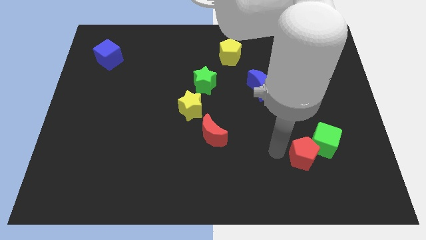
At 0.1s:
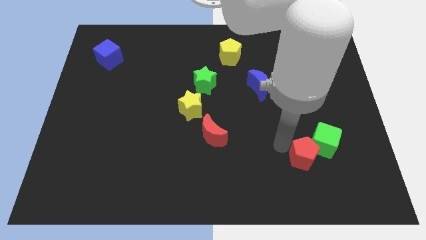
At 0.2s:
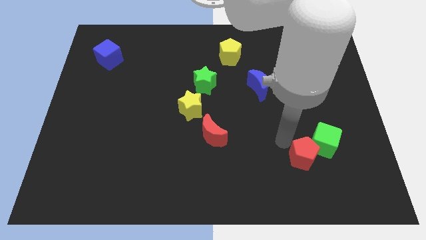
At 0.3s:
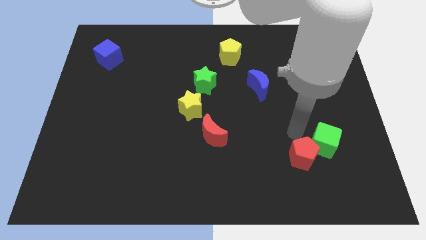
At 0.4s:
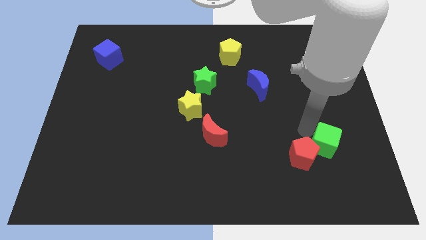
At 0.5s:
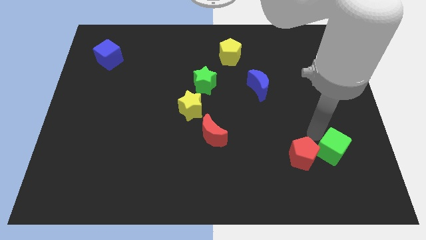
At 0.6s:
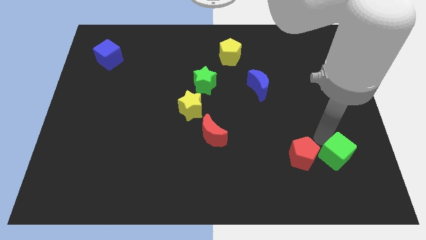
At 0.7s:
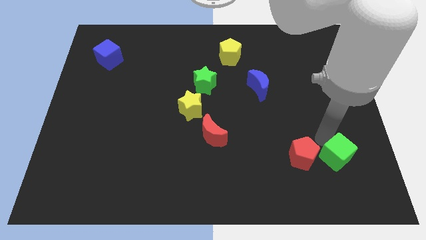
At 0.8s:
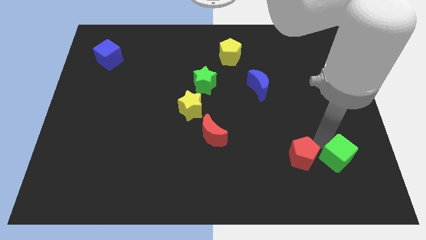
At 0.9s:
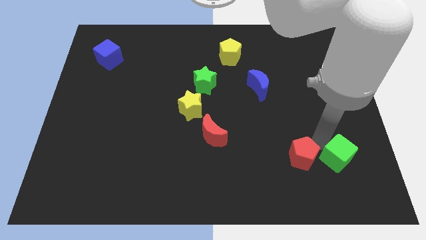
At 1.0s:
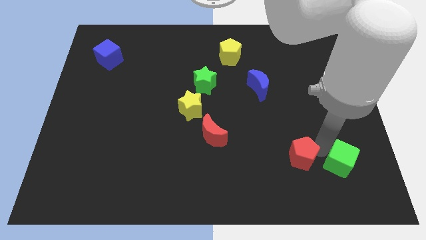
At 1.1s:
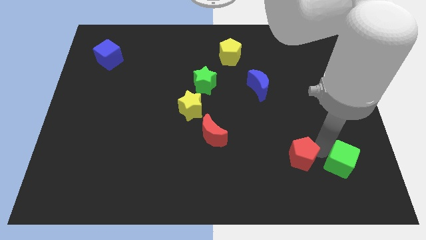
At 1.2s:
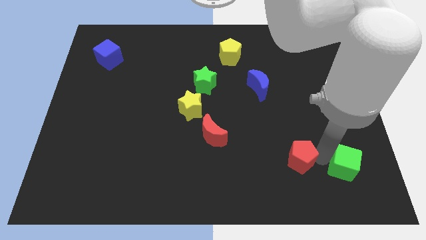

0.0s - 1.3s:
place the green cube right to the red pentagon

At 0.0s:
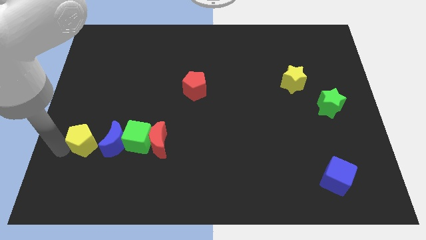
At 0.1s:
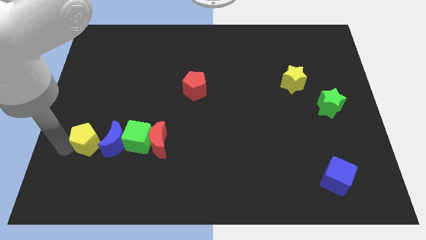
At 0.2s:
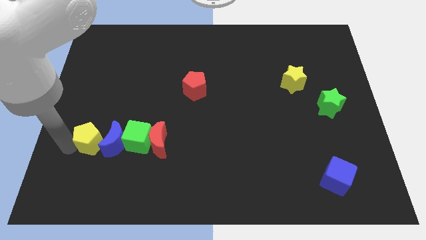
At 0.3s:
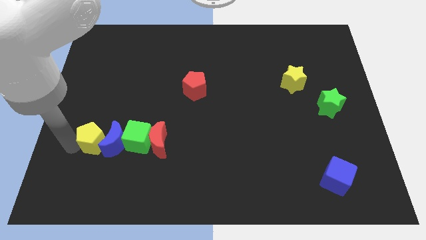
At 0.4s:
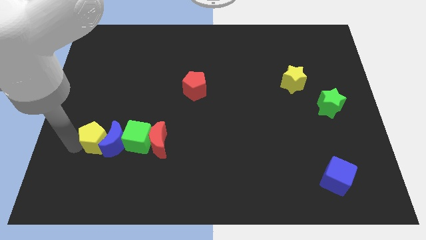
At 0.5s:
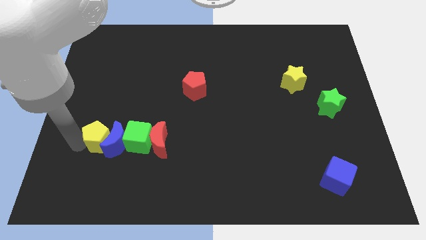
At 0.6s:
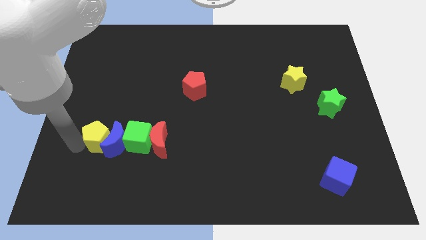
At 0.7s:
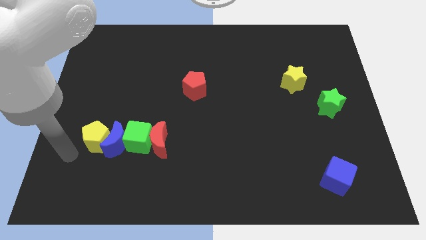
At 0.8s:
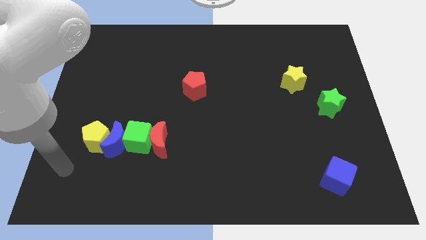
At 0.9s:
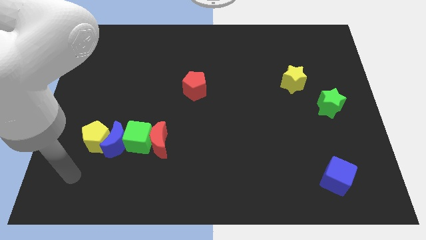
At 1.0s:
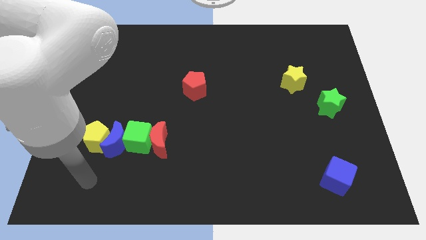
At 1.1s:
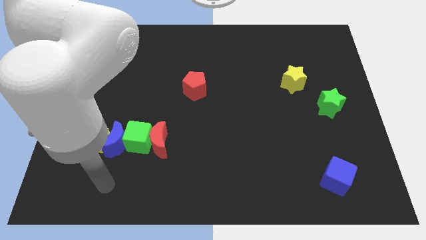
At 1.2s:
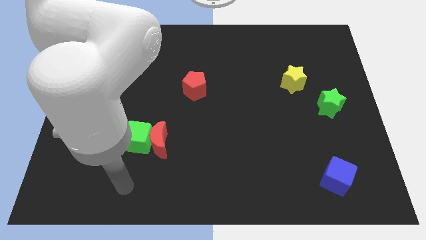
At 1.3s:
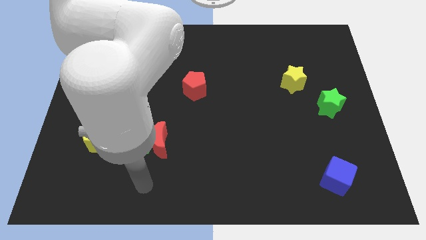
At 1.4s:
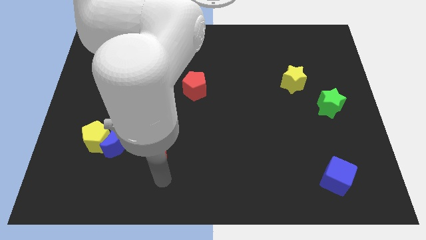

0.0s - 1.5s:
move yellow pentagon into blue moon

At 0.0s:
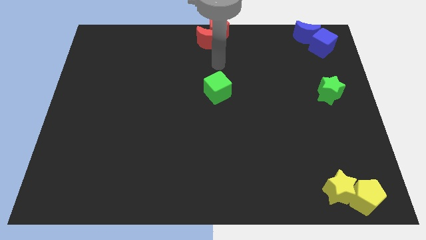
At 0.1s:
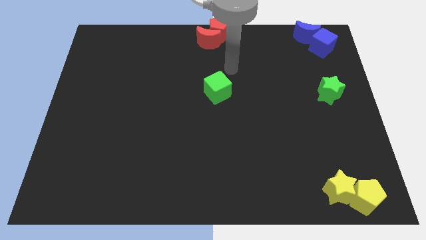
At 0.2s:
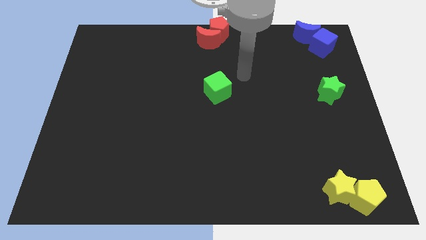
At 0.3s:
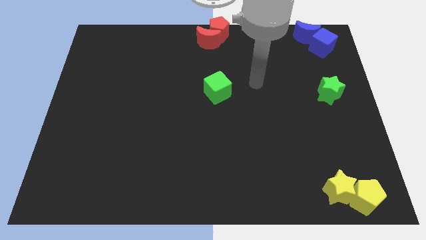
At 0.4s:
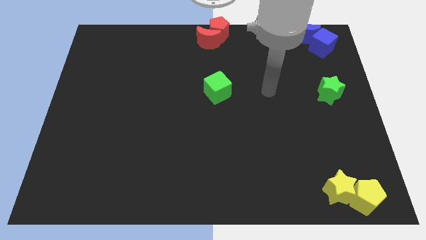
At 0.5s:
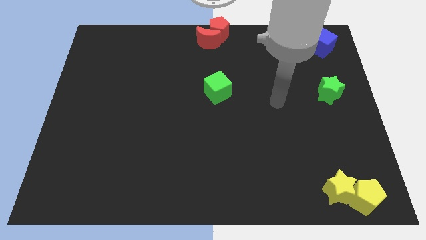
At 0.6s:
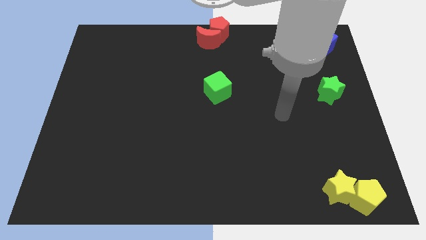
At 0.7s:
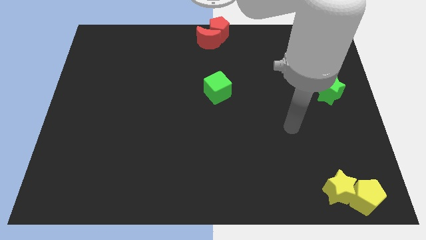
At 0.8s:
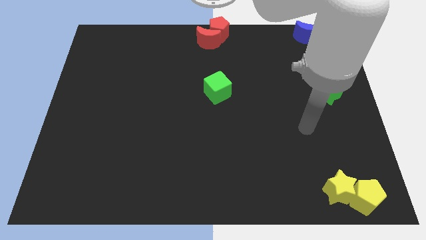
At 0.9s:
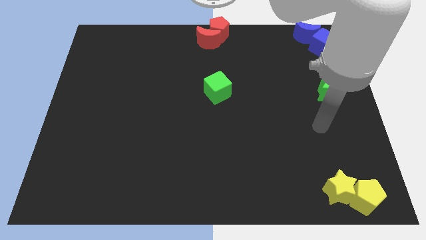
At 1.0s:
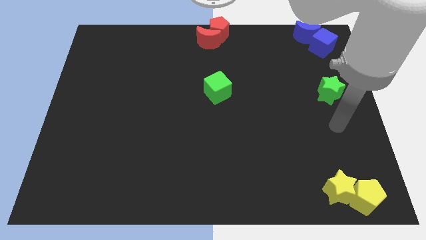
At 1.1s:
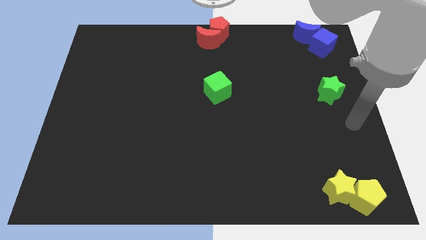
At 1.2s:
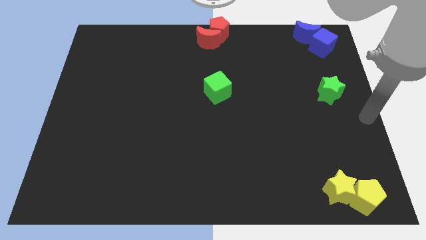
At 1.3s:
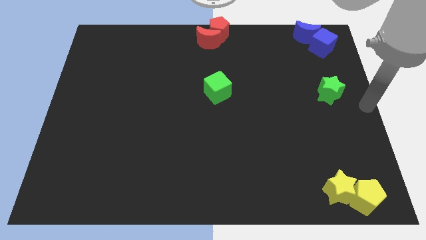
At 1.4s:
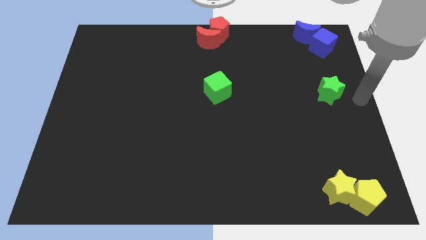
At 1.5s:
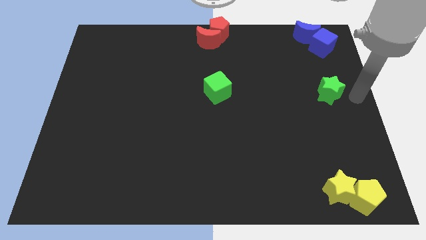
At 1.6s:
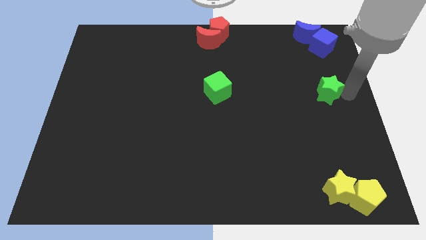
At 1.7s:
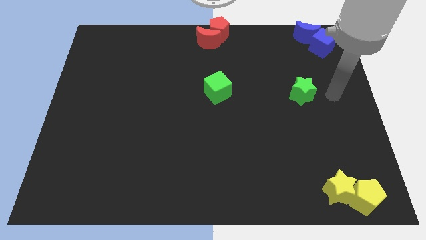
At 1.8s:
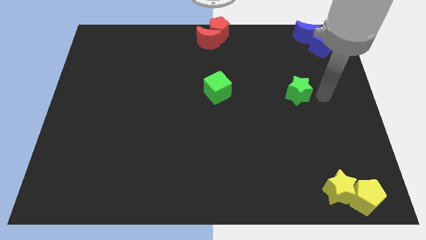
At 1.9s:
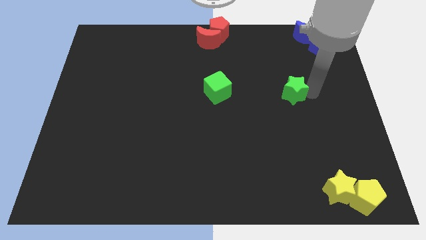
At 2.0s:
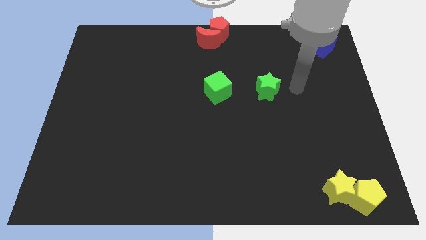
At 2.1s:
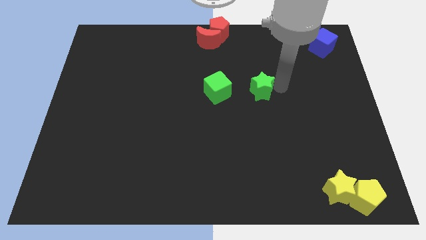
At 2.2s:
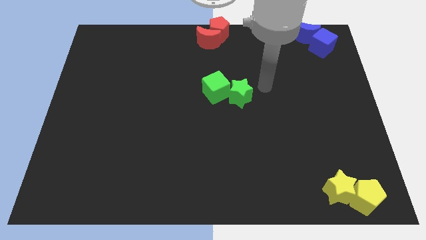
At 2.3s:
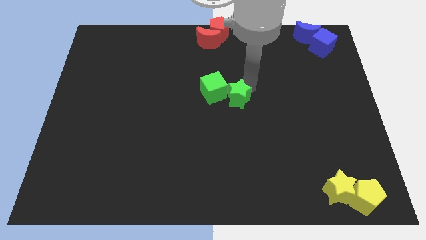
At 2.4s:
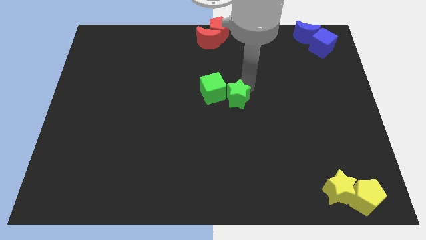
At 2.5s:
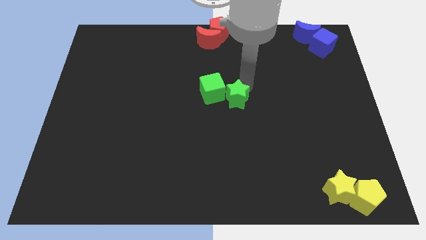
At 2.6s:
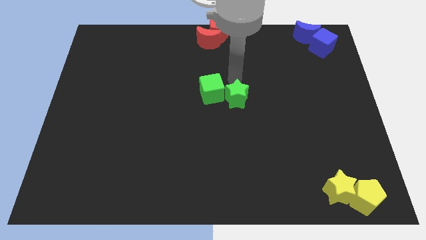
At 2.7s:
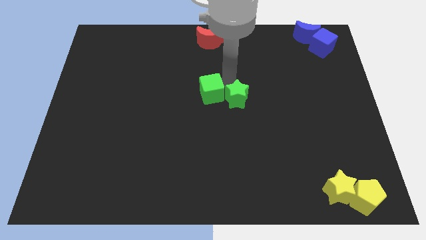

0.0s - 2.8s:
move the green star into the green cube

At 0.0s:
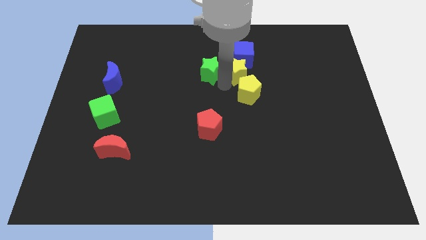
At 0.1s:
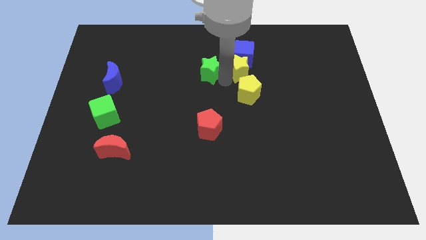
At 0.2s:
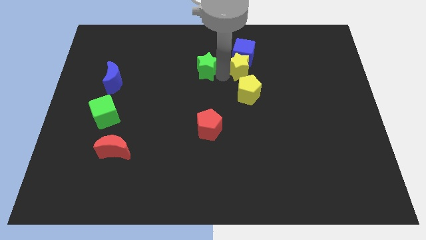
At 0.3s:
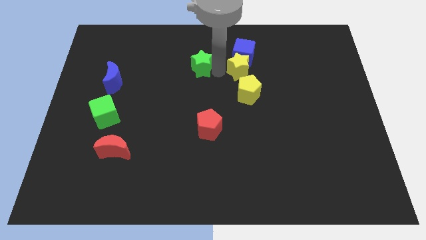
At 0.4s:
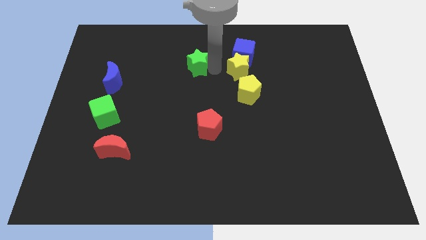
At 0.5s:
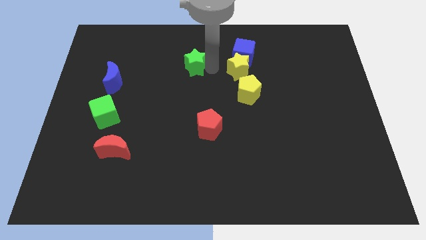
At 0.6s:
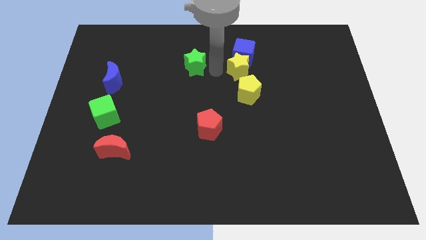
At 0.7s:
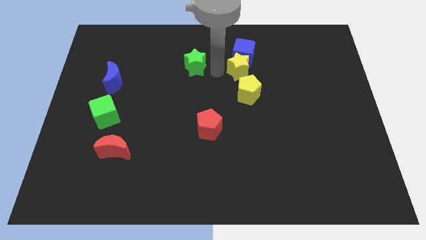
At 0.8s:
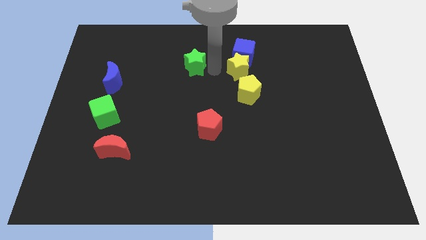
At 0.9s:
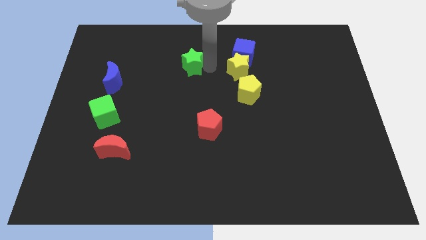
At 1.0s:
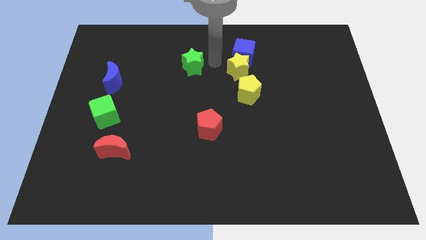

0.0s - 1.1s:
separate the green and yellow stars

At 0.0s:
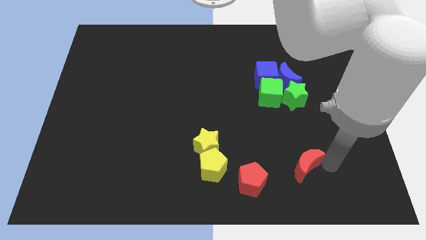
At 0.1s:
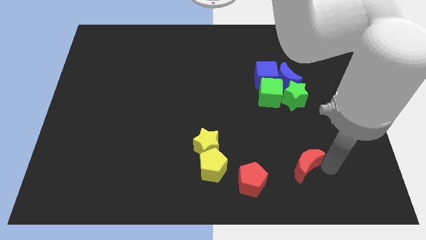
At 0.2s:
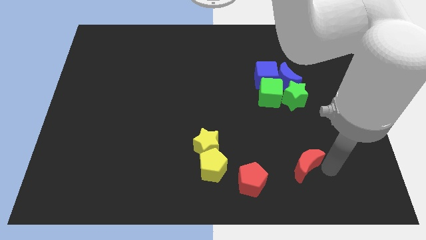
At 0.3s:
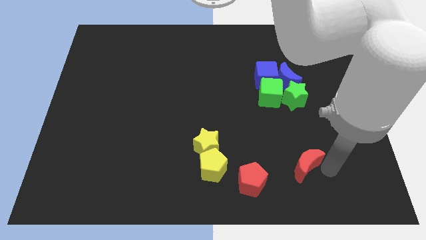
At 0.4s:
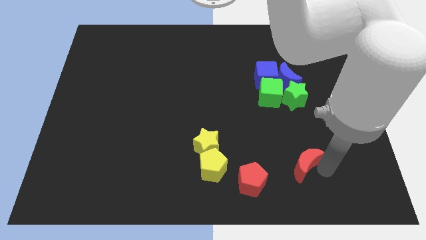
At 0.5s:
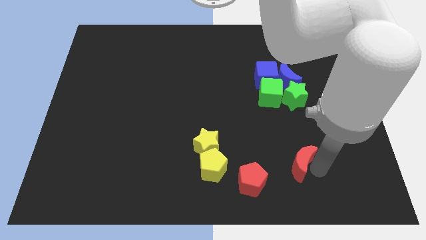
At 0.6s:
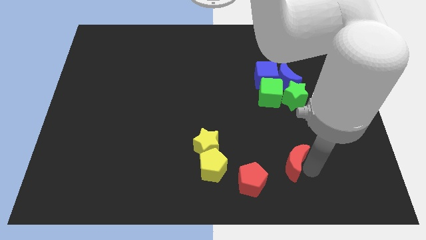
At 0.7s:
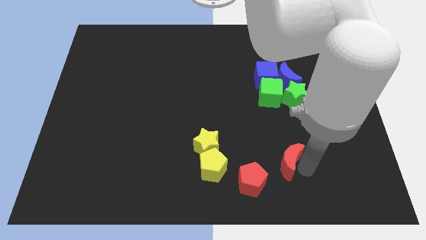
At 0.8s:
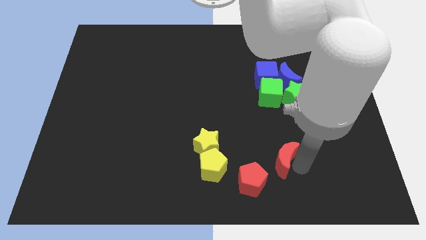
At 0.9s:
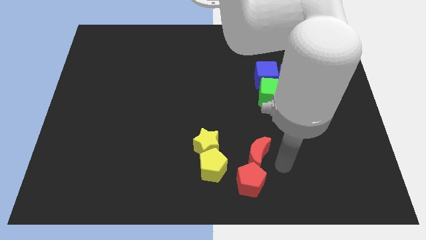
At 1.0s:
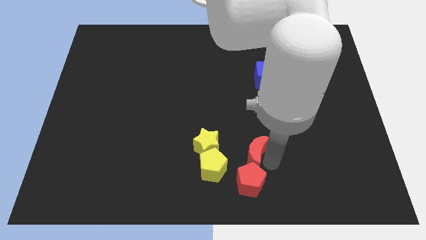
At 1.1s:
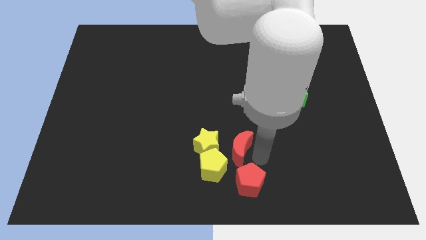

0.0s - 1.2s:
push red crescent above red pentagon

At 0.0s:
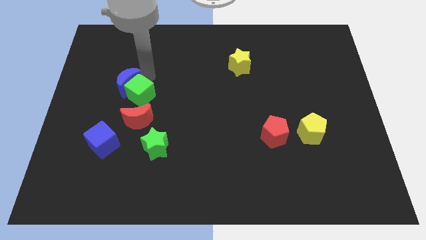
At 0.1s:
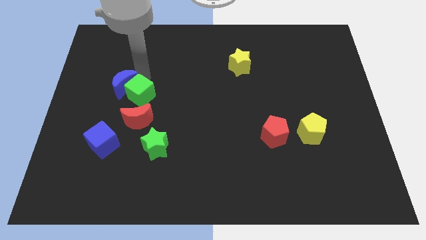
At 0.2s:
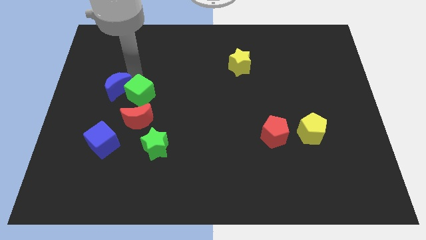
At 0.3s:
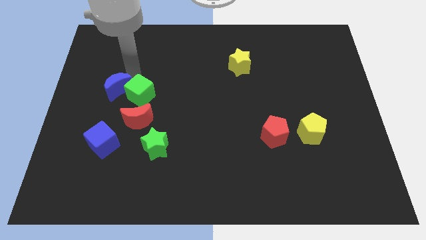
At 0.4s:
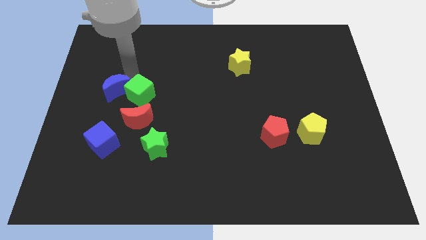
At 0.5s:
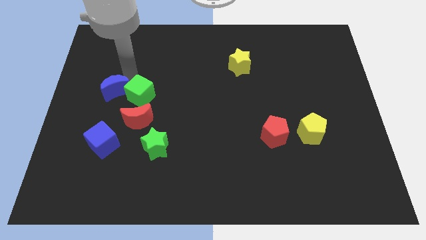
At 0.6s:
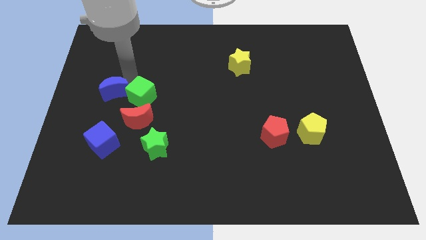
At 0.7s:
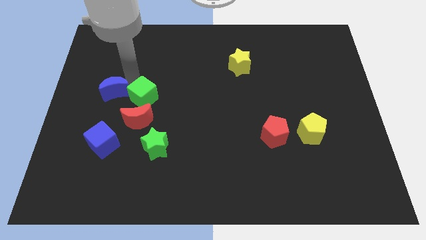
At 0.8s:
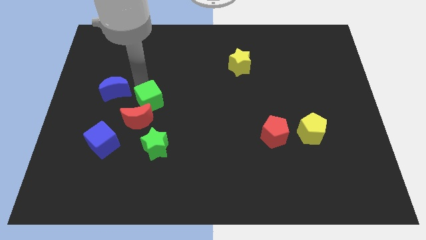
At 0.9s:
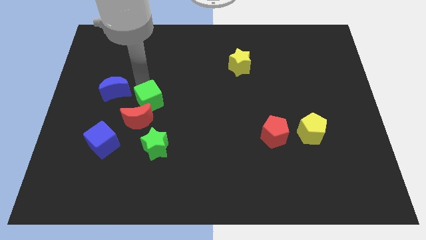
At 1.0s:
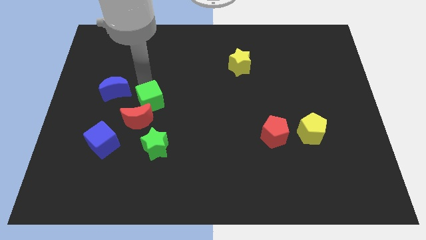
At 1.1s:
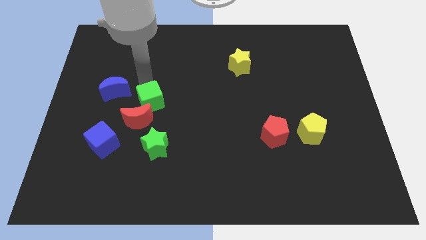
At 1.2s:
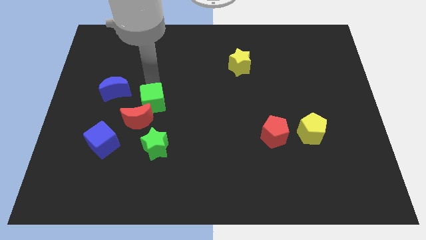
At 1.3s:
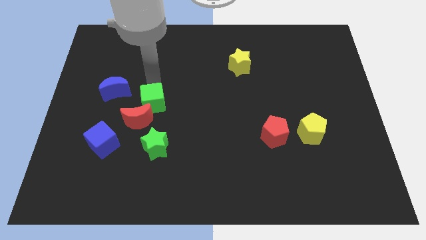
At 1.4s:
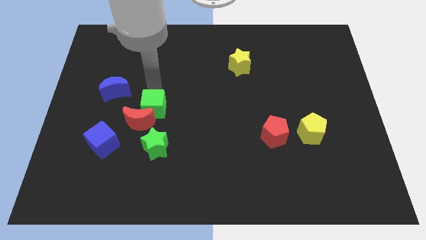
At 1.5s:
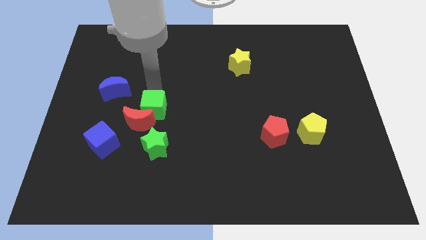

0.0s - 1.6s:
push the green cube to the top right of the red crescent
